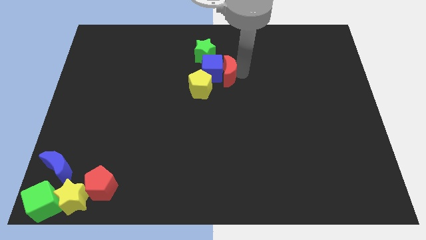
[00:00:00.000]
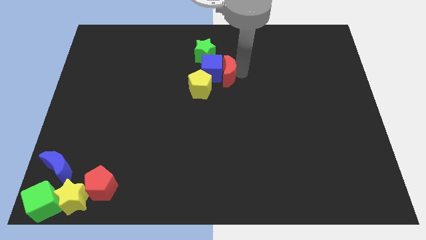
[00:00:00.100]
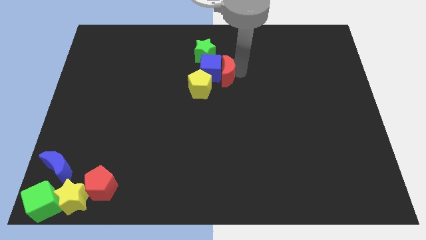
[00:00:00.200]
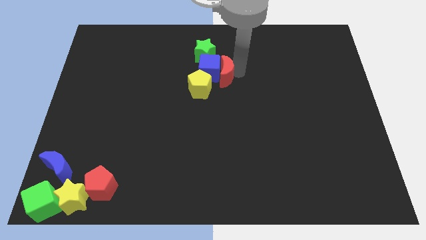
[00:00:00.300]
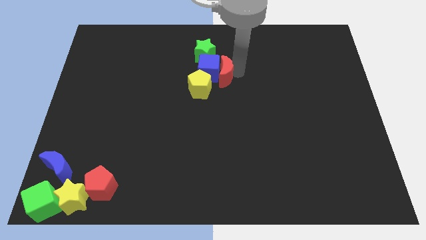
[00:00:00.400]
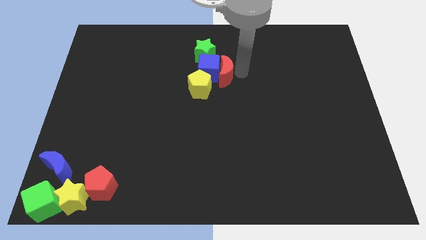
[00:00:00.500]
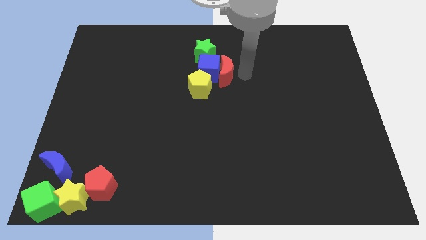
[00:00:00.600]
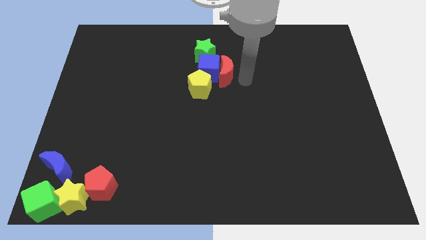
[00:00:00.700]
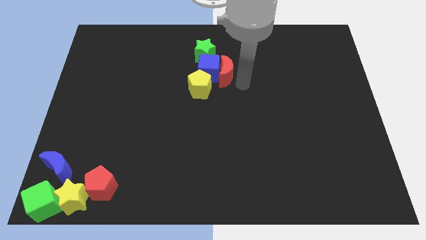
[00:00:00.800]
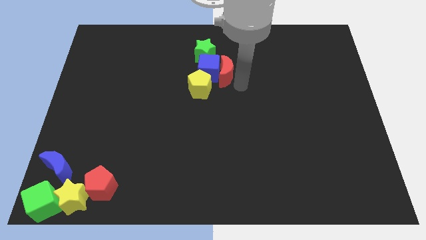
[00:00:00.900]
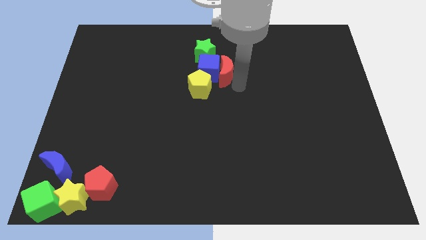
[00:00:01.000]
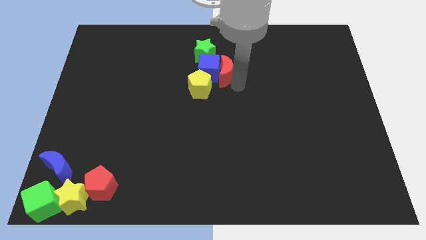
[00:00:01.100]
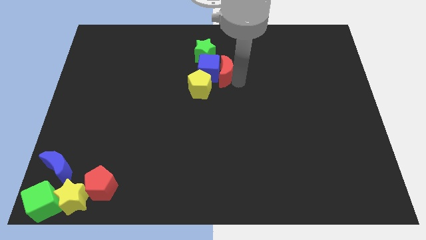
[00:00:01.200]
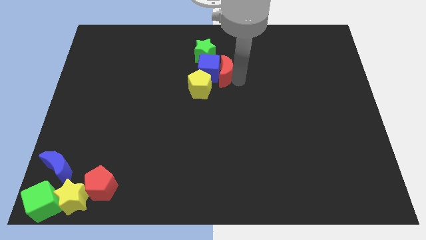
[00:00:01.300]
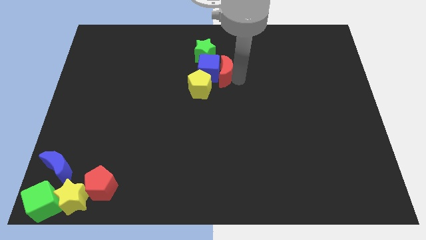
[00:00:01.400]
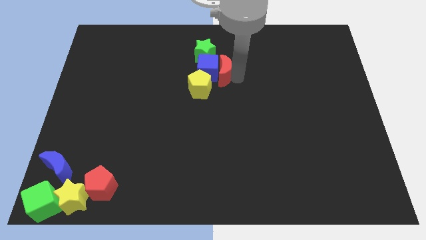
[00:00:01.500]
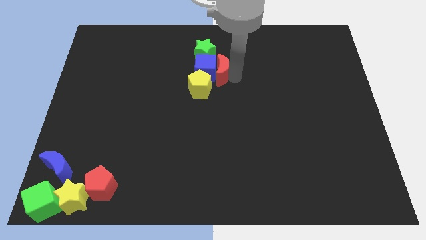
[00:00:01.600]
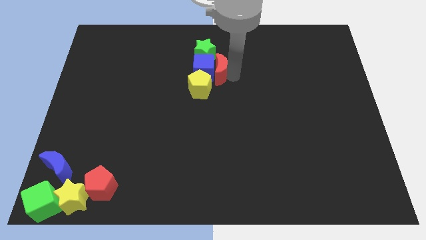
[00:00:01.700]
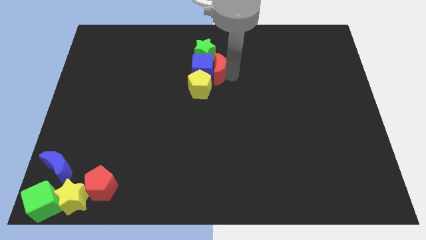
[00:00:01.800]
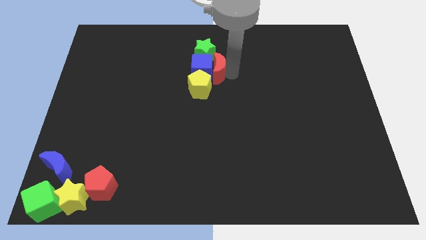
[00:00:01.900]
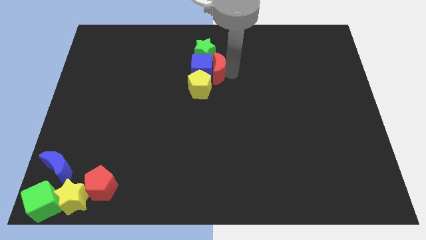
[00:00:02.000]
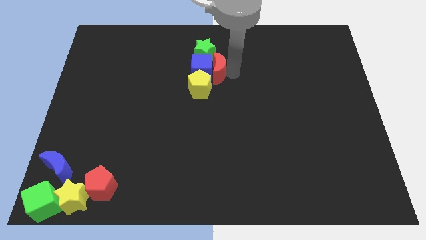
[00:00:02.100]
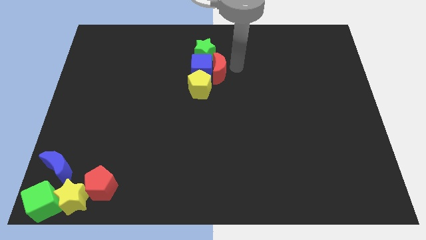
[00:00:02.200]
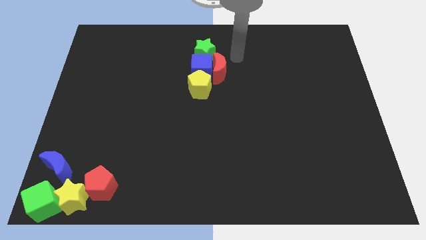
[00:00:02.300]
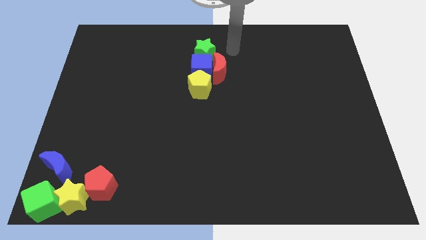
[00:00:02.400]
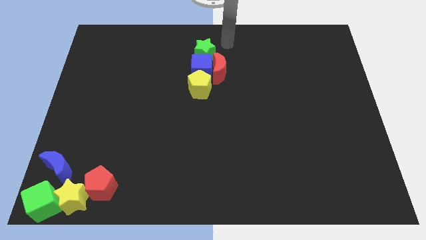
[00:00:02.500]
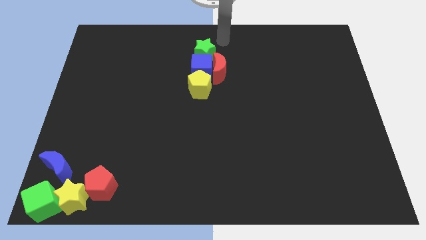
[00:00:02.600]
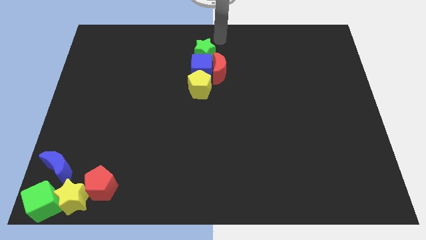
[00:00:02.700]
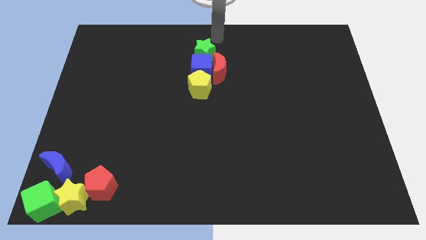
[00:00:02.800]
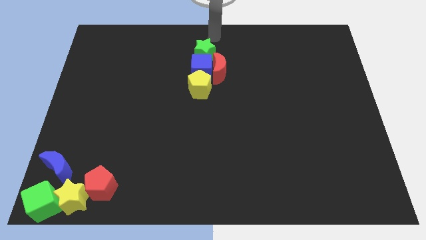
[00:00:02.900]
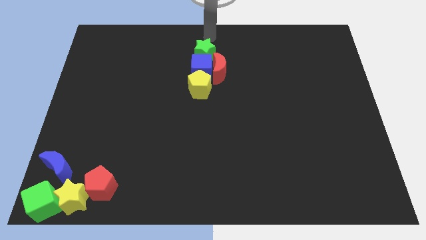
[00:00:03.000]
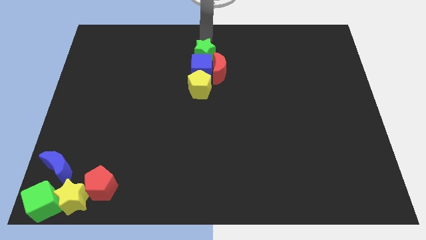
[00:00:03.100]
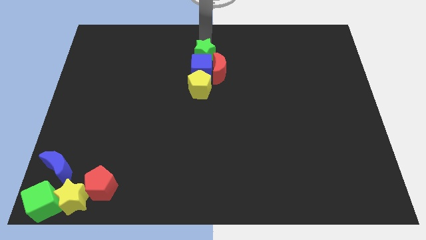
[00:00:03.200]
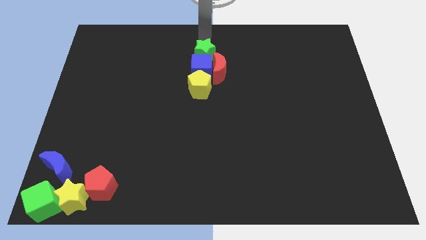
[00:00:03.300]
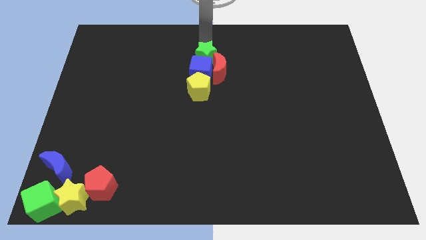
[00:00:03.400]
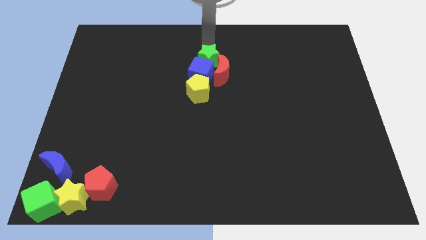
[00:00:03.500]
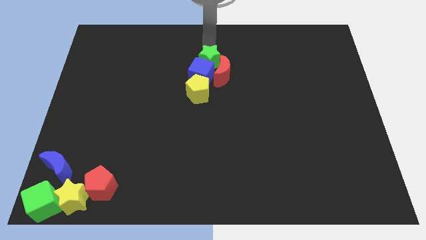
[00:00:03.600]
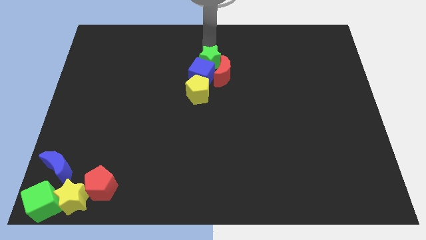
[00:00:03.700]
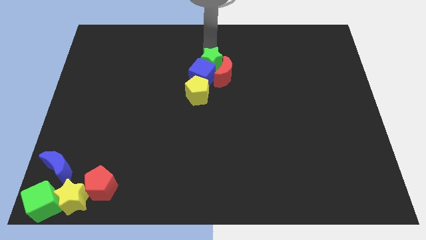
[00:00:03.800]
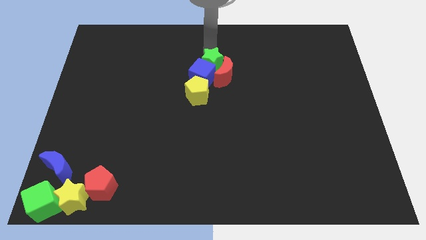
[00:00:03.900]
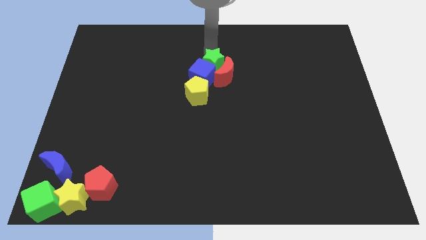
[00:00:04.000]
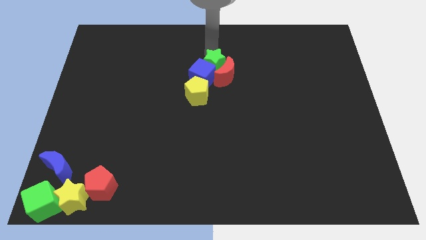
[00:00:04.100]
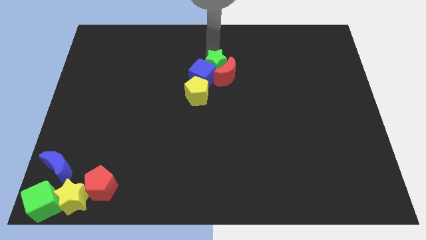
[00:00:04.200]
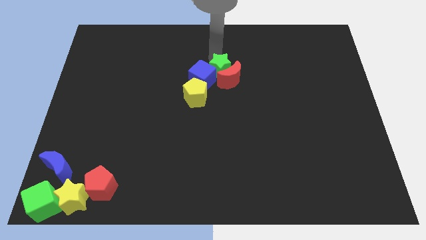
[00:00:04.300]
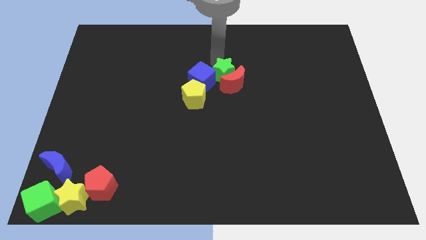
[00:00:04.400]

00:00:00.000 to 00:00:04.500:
place the green star into the red moon

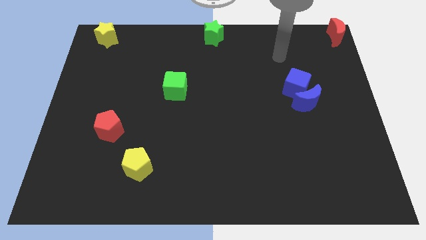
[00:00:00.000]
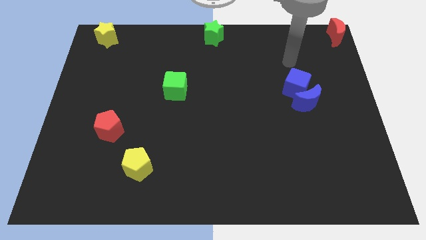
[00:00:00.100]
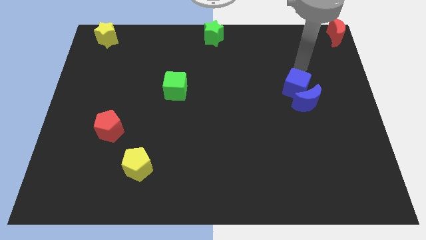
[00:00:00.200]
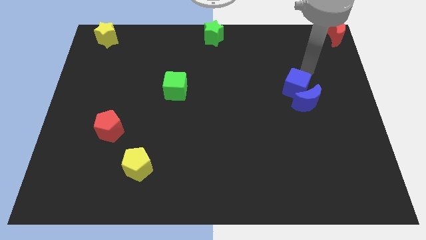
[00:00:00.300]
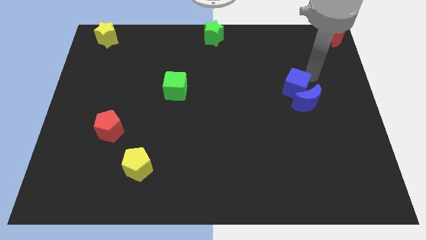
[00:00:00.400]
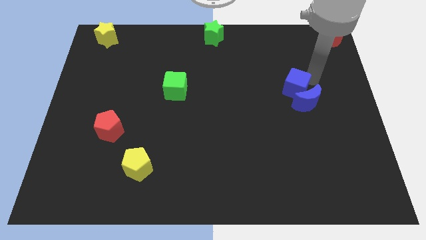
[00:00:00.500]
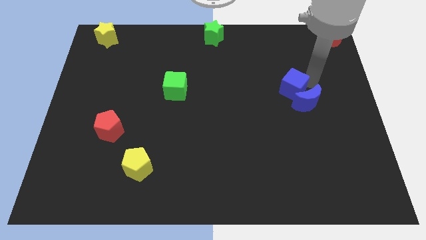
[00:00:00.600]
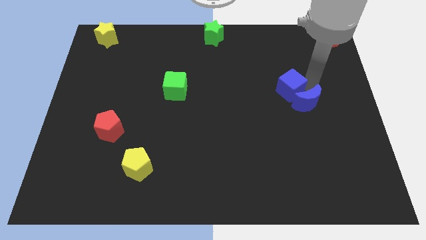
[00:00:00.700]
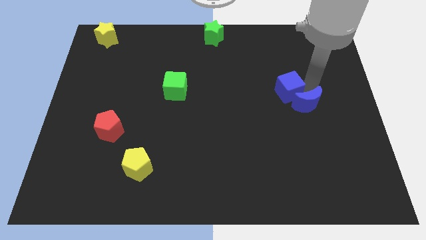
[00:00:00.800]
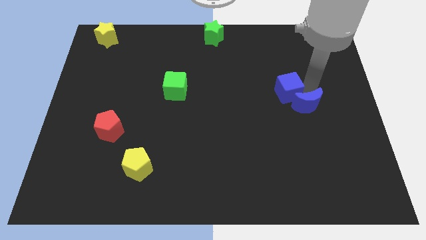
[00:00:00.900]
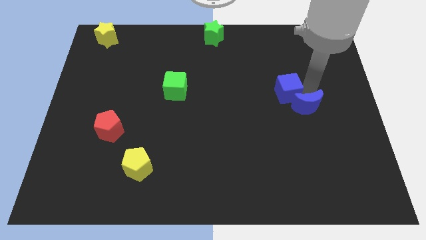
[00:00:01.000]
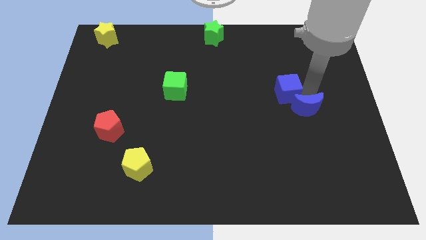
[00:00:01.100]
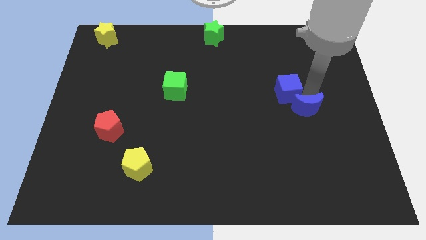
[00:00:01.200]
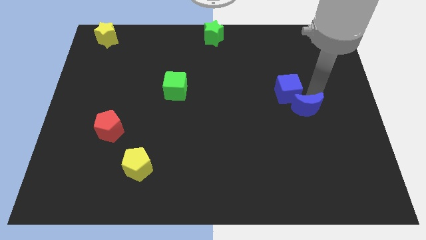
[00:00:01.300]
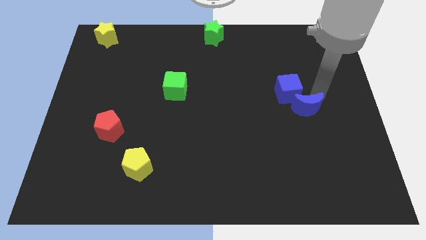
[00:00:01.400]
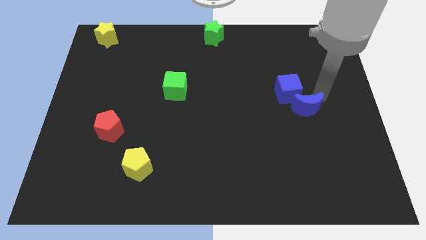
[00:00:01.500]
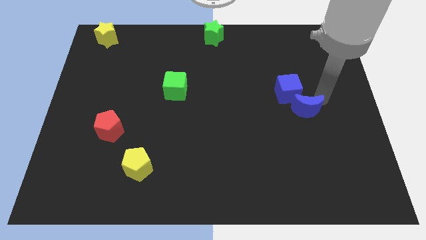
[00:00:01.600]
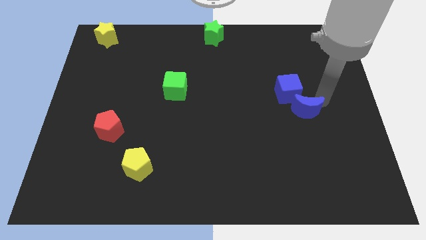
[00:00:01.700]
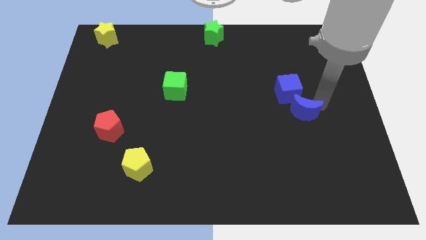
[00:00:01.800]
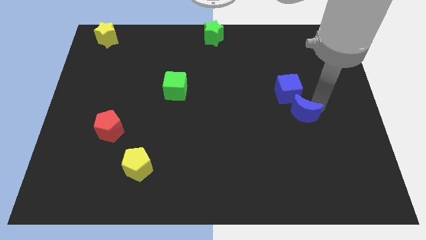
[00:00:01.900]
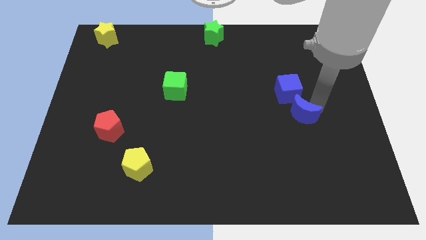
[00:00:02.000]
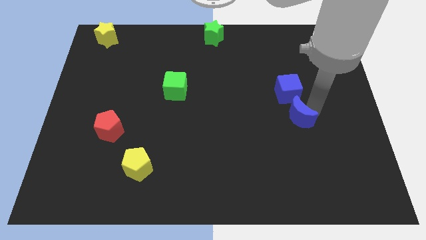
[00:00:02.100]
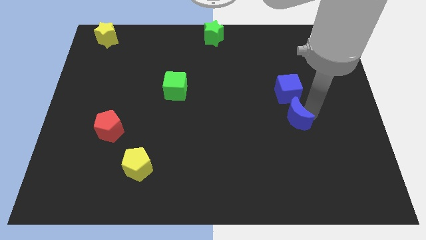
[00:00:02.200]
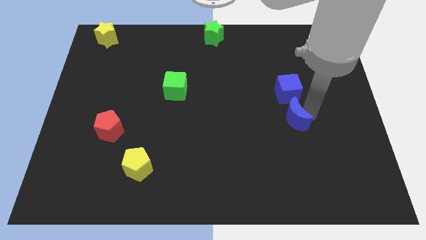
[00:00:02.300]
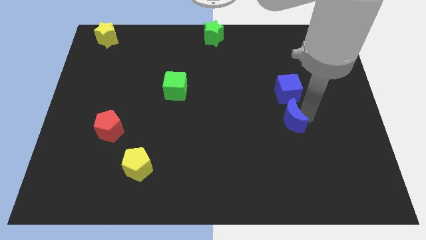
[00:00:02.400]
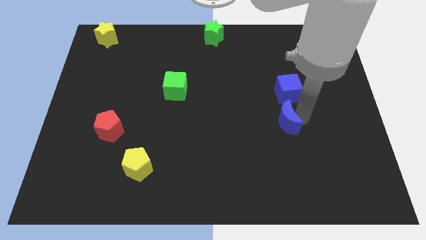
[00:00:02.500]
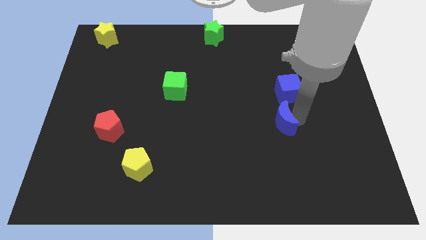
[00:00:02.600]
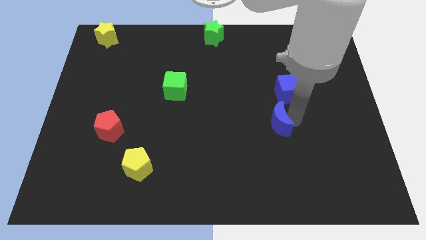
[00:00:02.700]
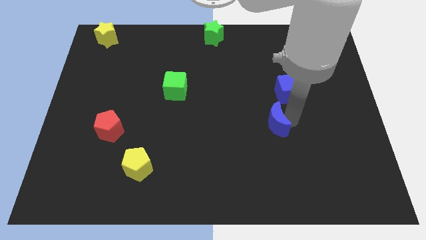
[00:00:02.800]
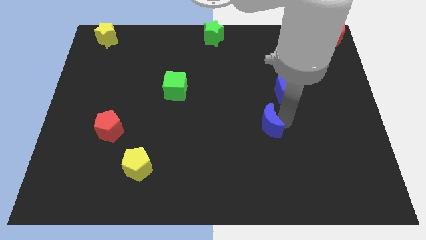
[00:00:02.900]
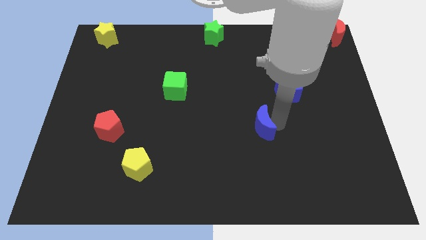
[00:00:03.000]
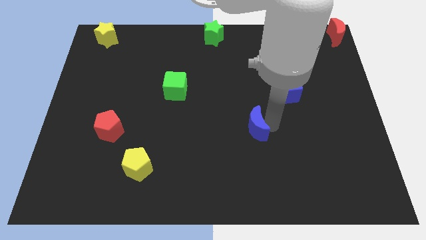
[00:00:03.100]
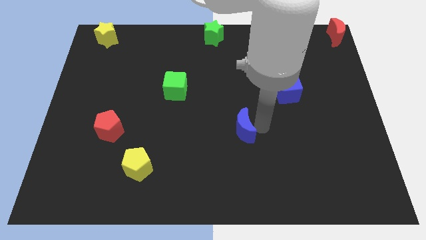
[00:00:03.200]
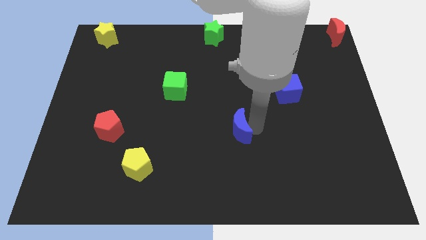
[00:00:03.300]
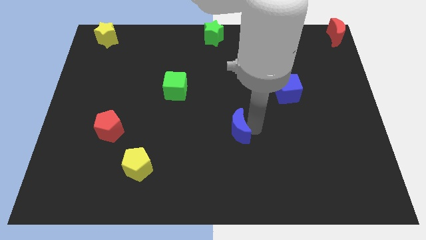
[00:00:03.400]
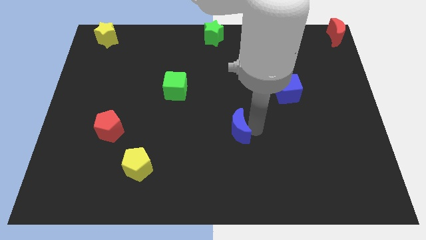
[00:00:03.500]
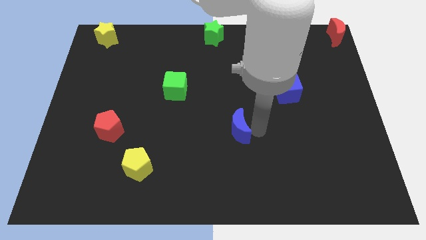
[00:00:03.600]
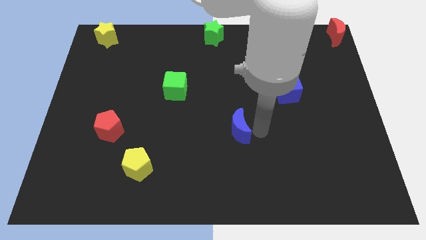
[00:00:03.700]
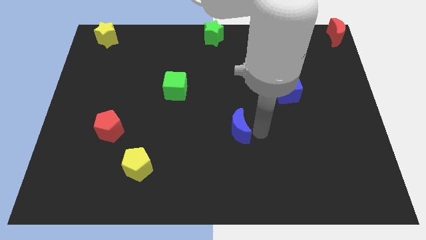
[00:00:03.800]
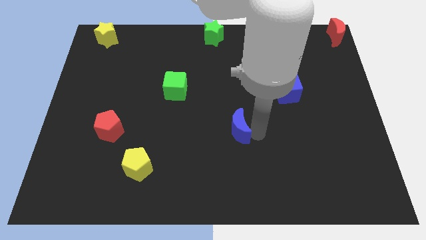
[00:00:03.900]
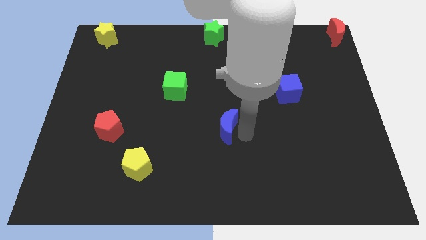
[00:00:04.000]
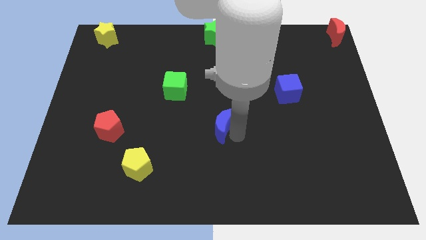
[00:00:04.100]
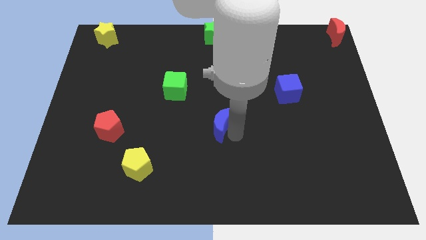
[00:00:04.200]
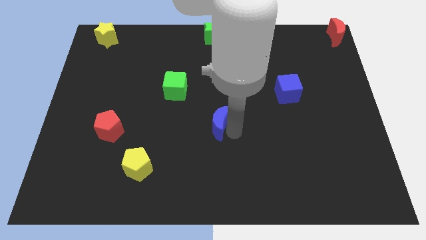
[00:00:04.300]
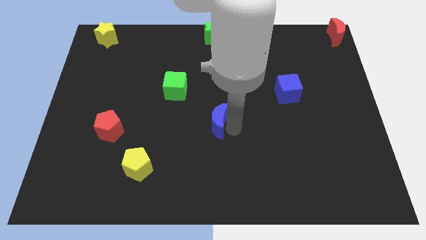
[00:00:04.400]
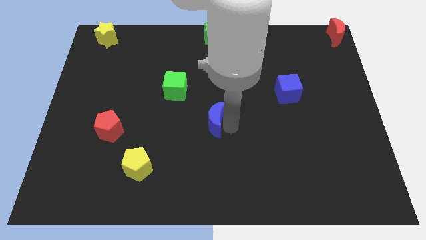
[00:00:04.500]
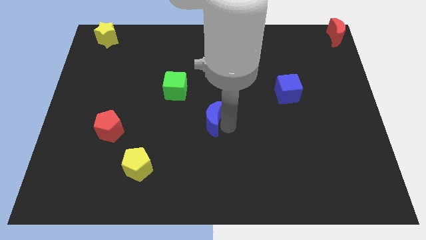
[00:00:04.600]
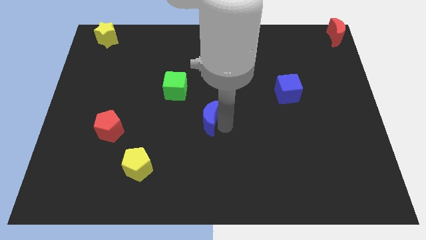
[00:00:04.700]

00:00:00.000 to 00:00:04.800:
move the blue crescent to the center of the board
